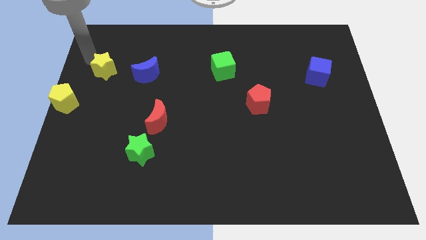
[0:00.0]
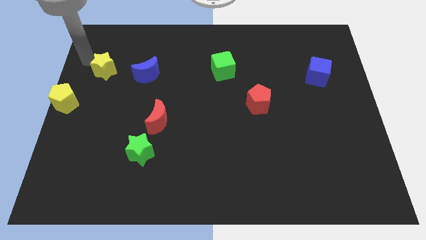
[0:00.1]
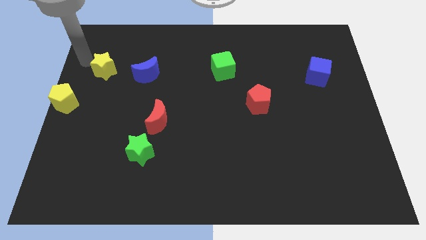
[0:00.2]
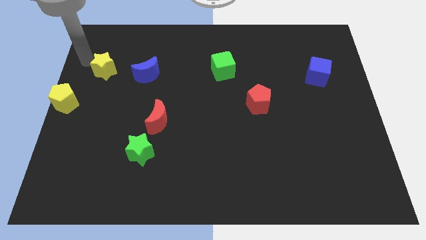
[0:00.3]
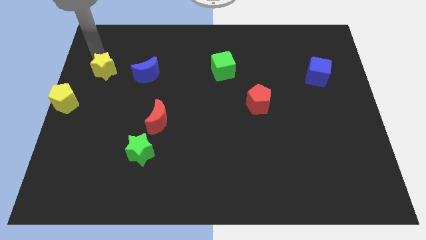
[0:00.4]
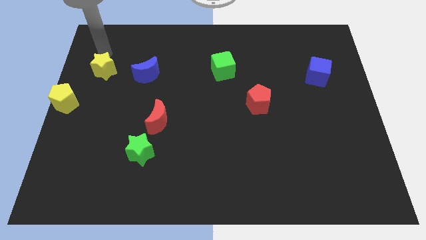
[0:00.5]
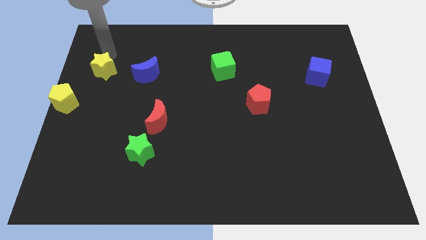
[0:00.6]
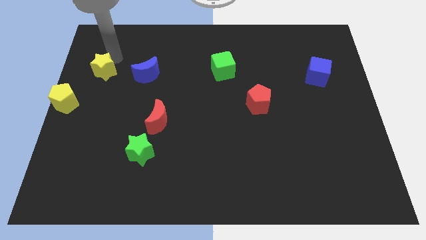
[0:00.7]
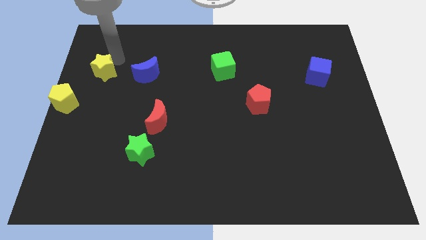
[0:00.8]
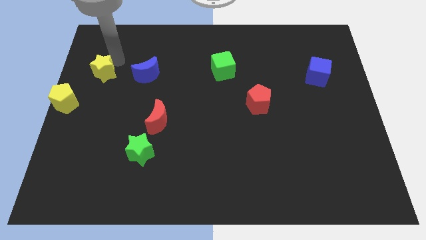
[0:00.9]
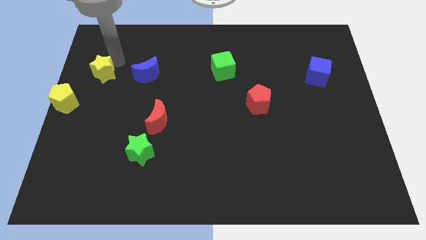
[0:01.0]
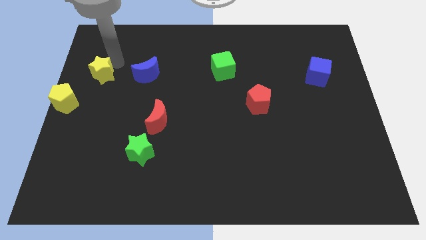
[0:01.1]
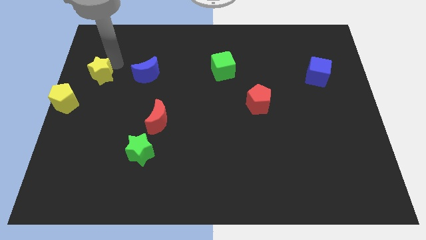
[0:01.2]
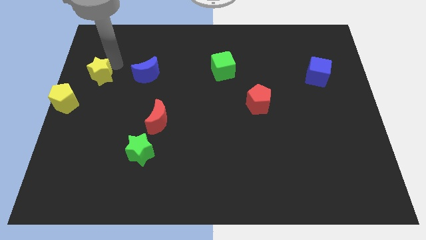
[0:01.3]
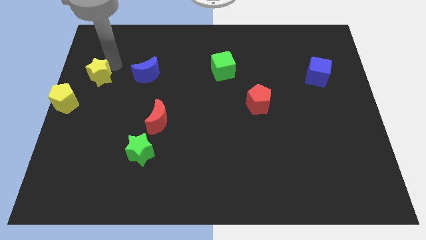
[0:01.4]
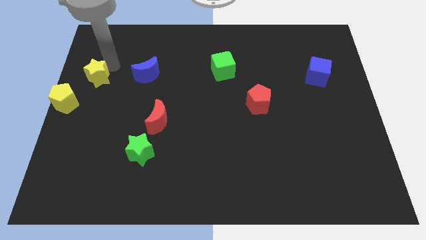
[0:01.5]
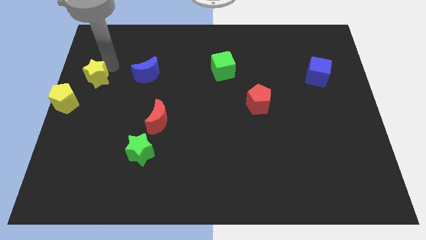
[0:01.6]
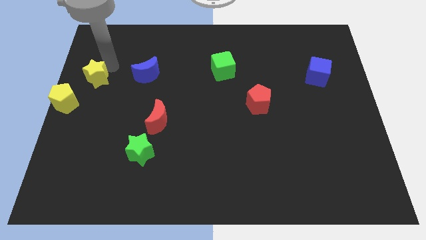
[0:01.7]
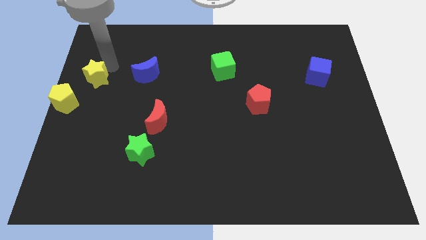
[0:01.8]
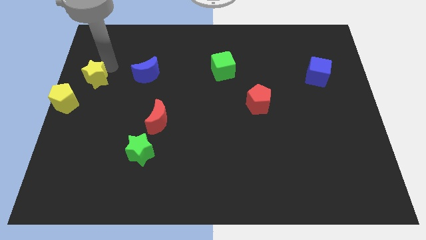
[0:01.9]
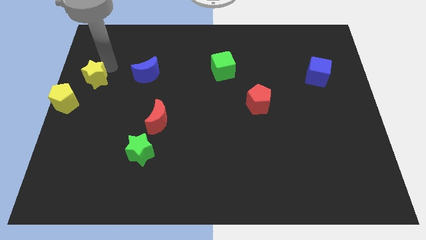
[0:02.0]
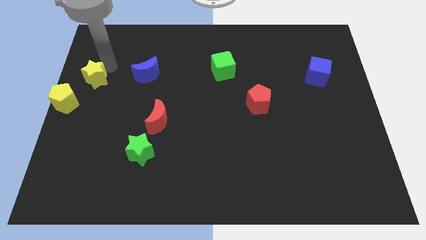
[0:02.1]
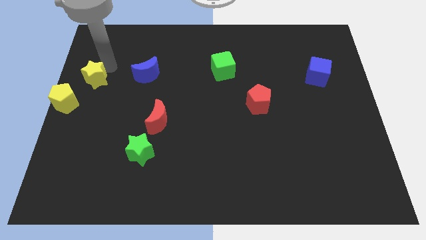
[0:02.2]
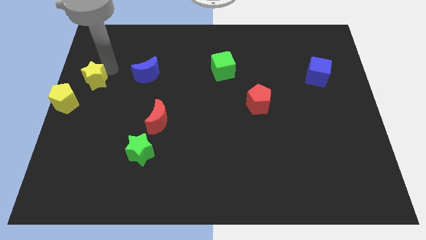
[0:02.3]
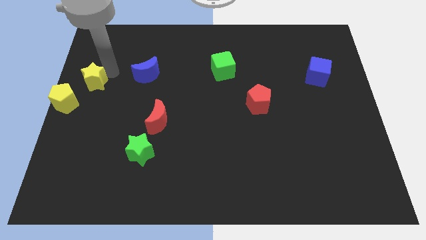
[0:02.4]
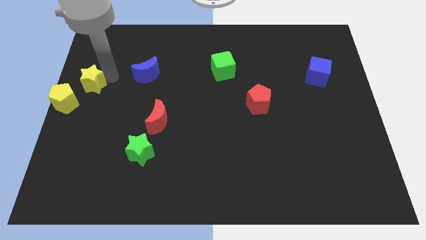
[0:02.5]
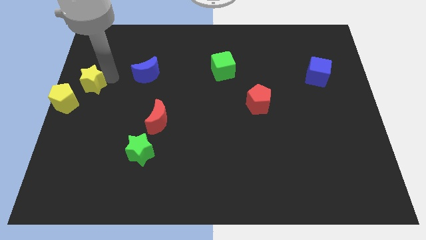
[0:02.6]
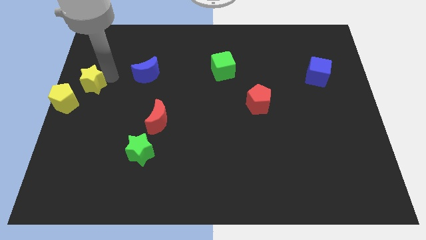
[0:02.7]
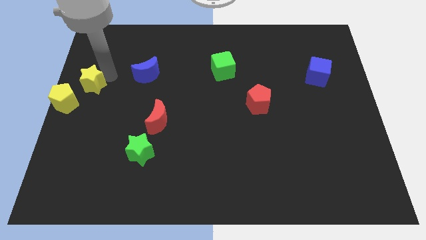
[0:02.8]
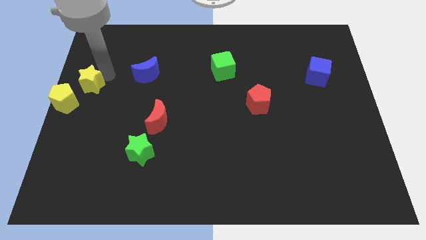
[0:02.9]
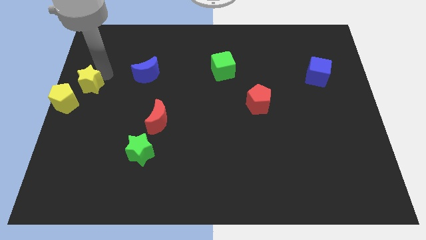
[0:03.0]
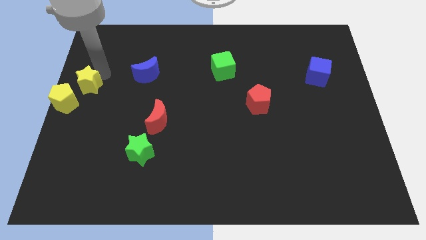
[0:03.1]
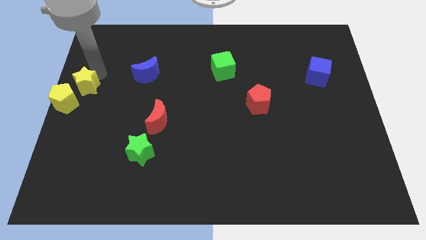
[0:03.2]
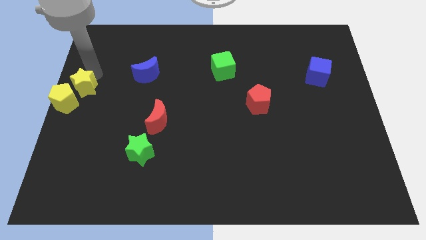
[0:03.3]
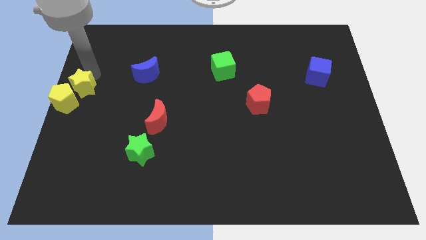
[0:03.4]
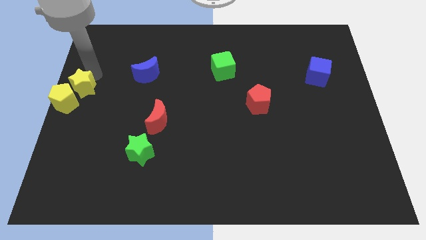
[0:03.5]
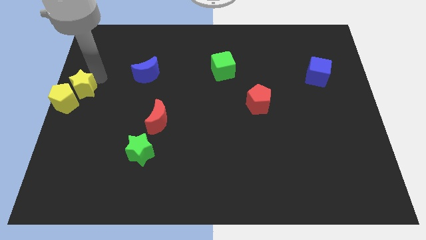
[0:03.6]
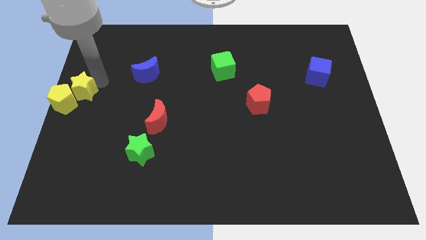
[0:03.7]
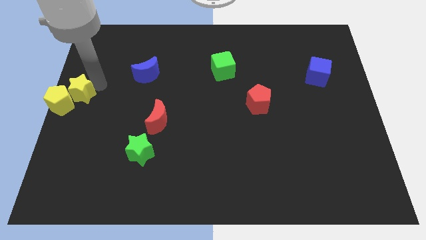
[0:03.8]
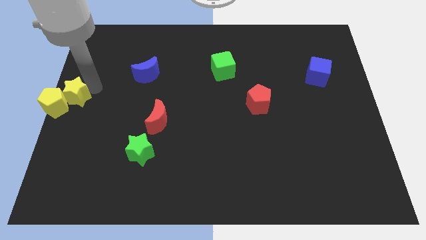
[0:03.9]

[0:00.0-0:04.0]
push the yellow star into the top right side of the yellow pentagon

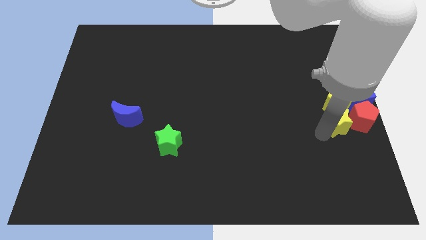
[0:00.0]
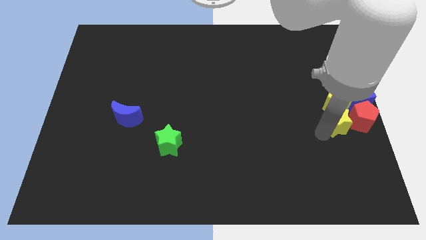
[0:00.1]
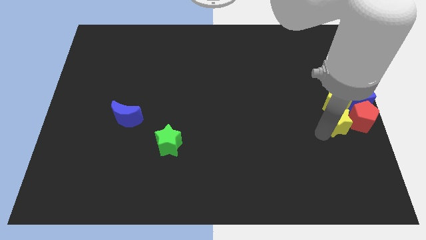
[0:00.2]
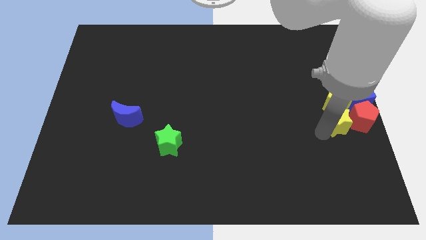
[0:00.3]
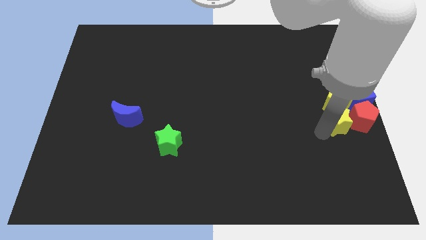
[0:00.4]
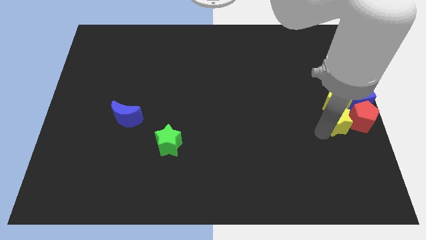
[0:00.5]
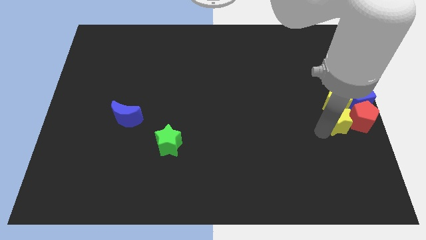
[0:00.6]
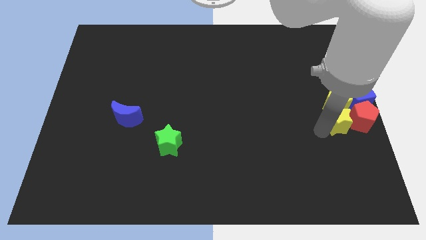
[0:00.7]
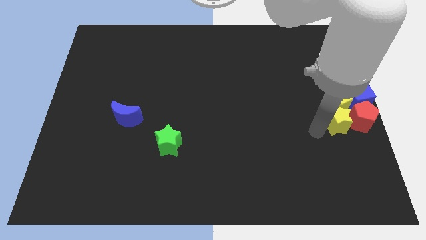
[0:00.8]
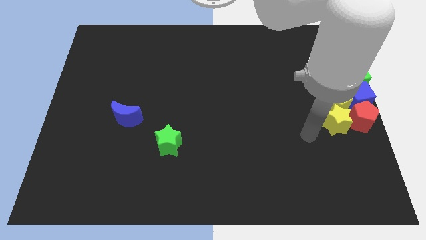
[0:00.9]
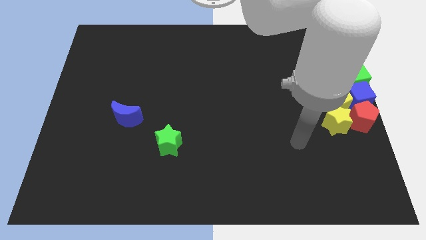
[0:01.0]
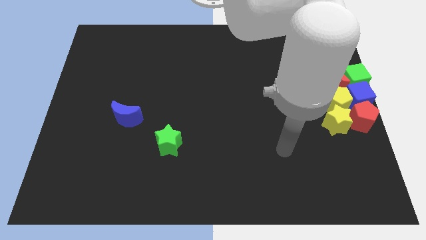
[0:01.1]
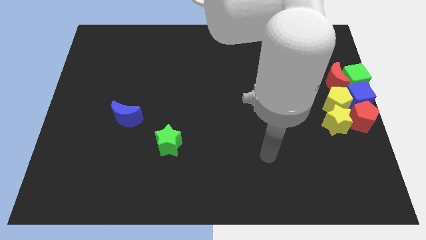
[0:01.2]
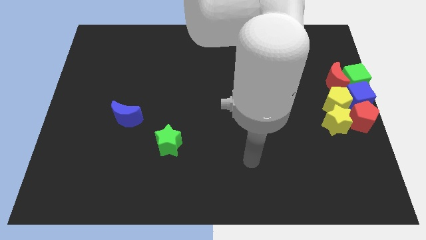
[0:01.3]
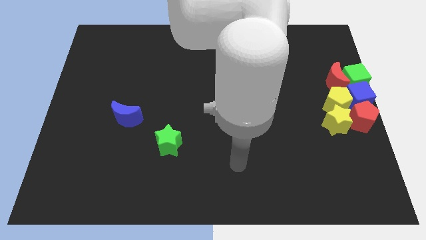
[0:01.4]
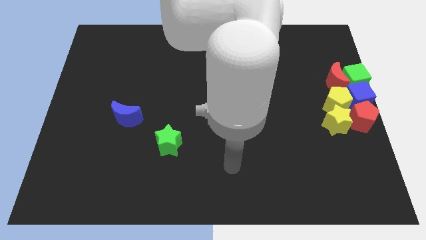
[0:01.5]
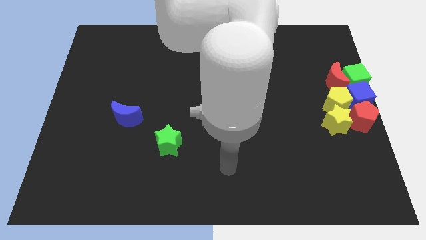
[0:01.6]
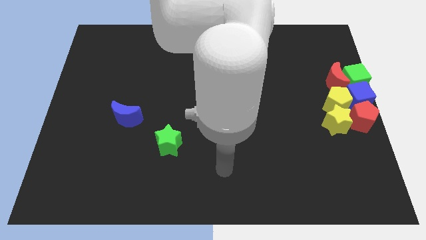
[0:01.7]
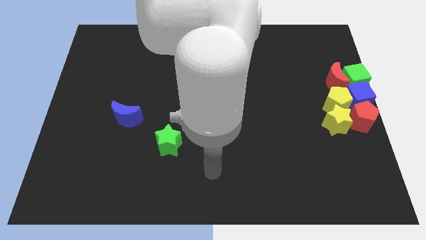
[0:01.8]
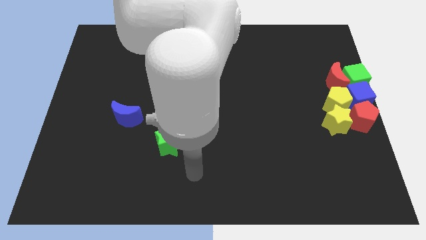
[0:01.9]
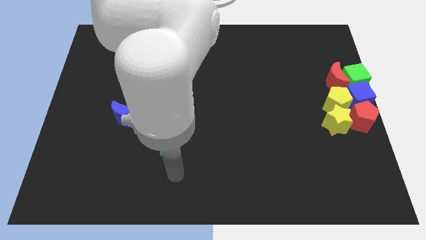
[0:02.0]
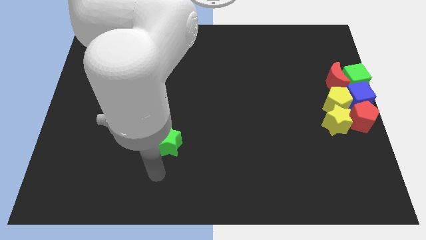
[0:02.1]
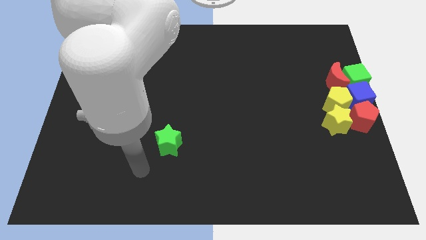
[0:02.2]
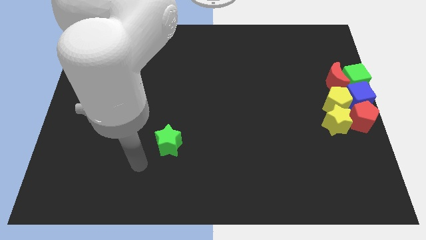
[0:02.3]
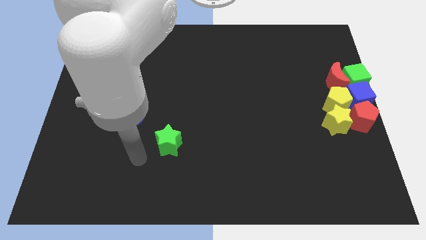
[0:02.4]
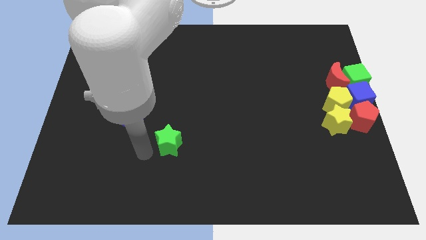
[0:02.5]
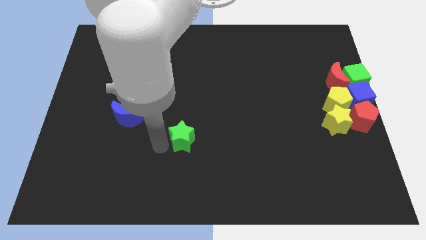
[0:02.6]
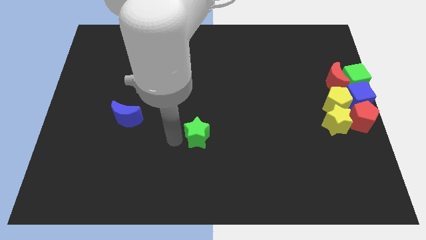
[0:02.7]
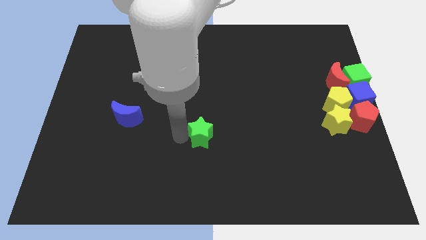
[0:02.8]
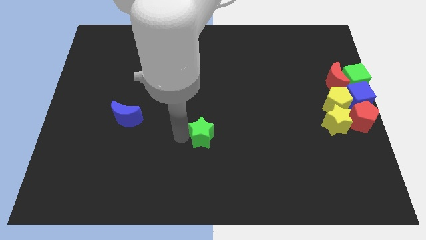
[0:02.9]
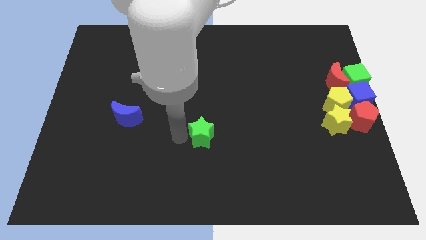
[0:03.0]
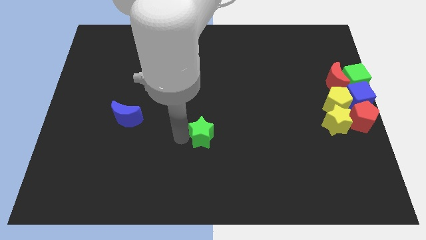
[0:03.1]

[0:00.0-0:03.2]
move your arm left to the green star

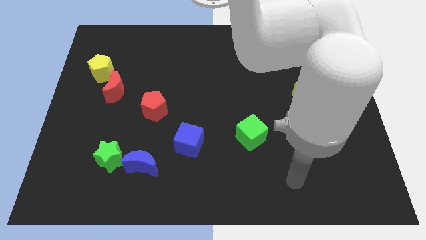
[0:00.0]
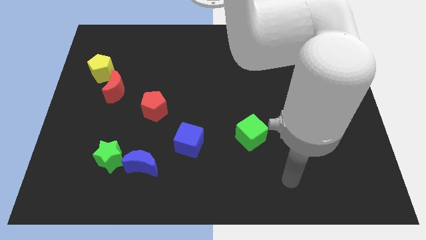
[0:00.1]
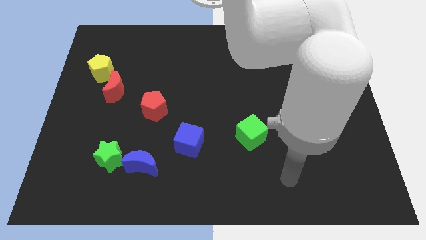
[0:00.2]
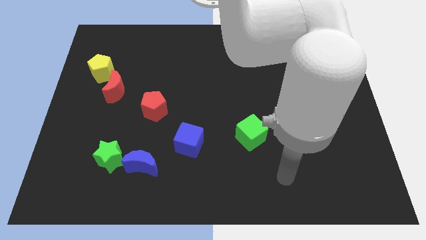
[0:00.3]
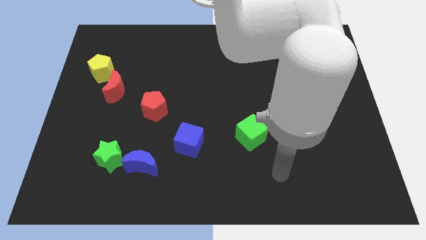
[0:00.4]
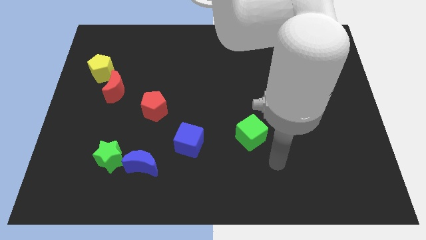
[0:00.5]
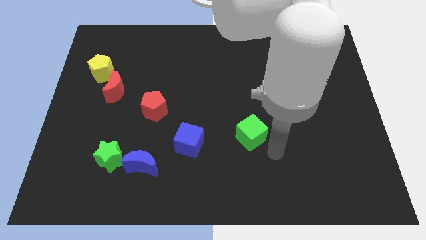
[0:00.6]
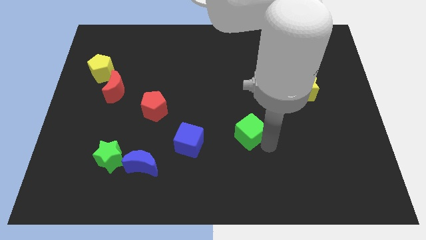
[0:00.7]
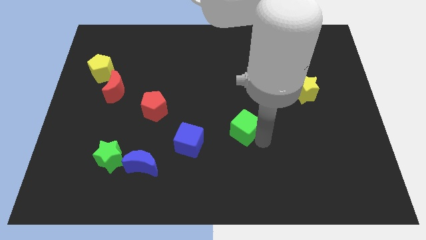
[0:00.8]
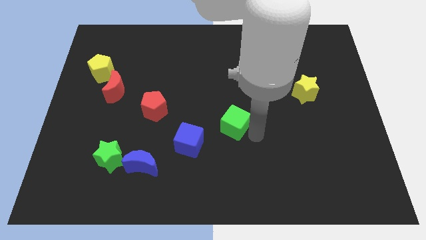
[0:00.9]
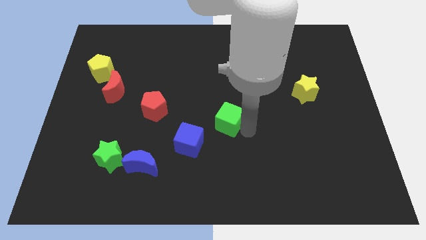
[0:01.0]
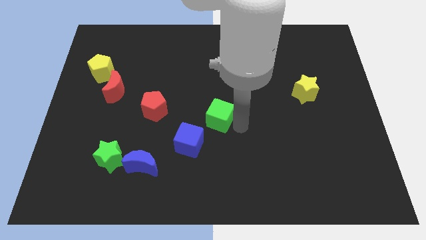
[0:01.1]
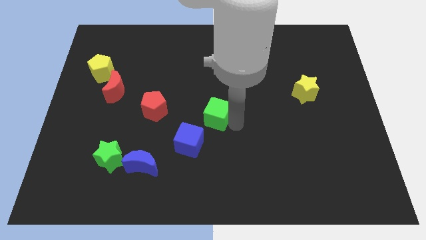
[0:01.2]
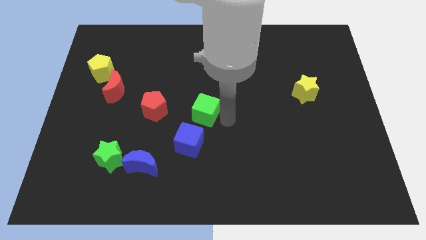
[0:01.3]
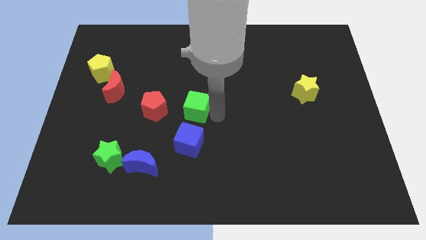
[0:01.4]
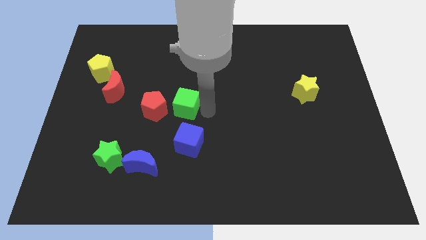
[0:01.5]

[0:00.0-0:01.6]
place the green cube above the blue cube
